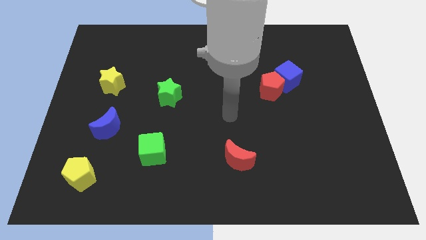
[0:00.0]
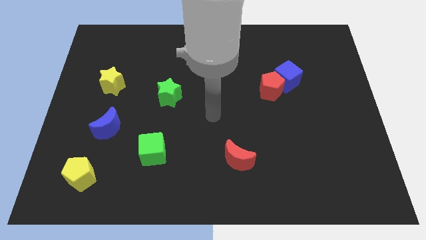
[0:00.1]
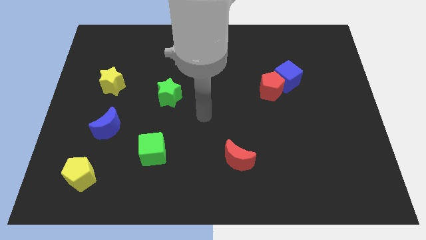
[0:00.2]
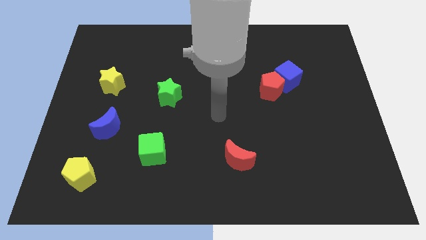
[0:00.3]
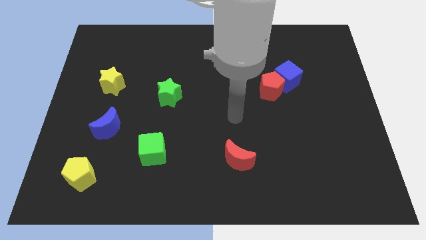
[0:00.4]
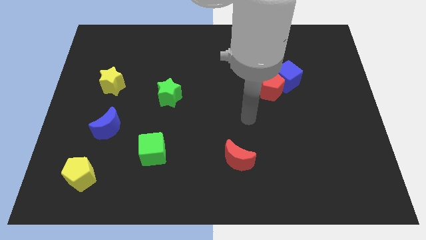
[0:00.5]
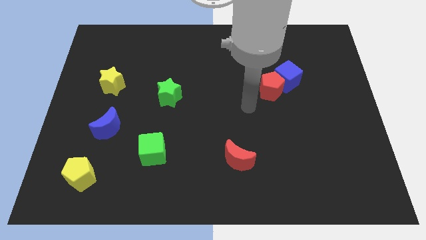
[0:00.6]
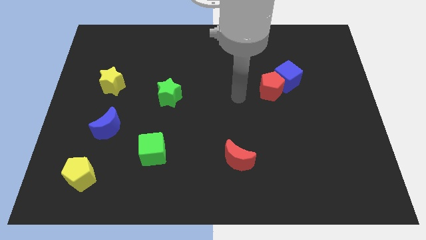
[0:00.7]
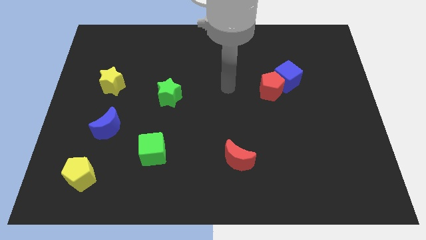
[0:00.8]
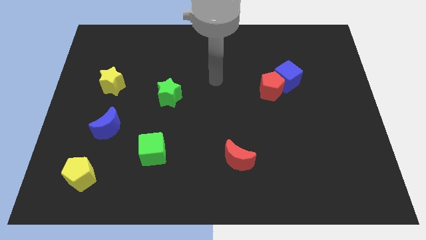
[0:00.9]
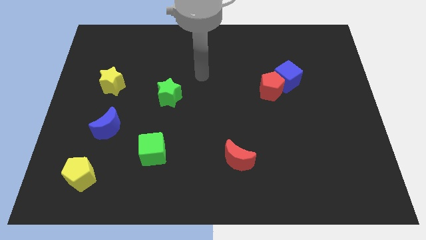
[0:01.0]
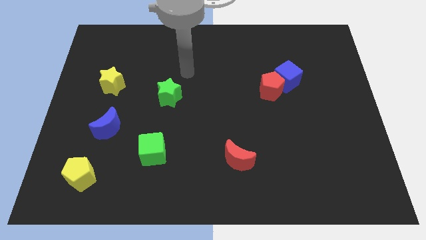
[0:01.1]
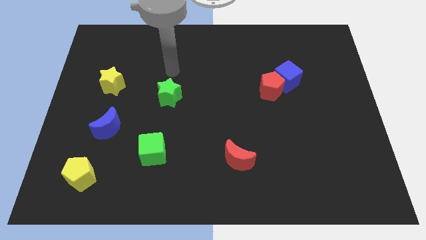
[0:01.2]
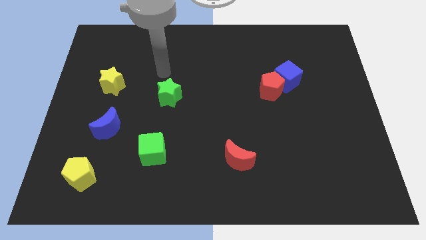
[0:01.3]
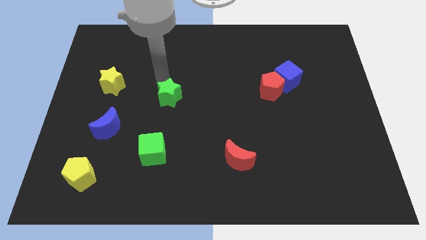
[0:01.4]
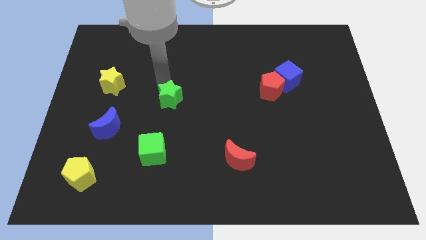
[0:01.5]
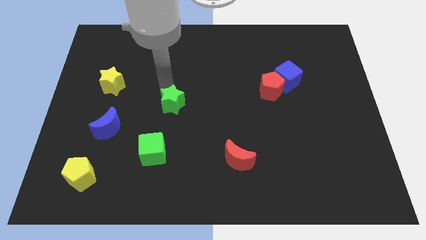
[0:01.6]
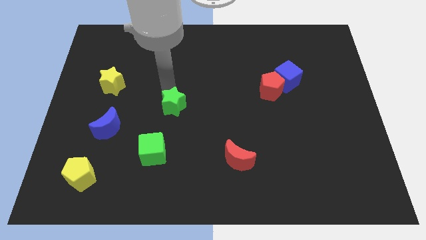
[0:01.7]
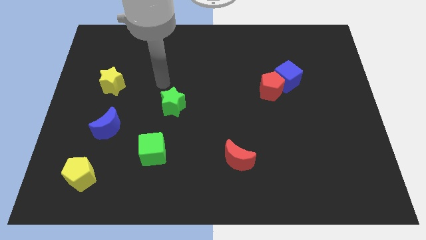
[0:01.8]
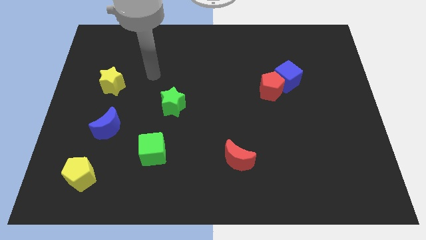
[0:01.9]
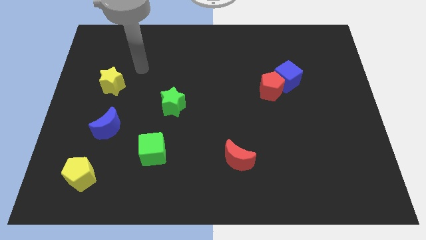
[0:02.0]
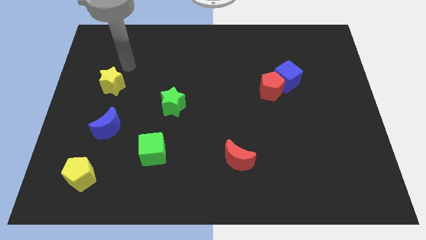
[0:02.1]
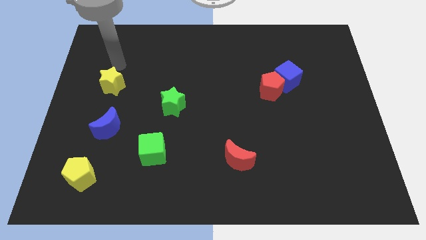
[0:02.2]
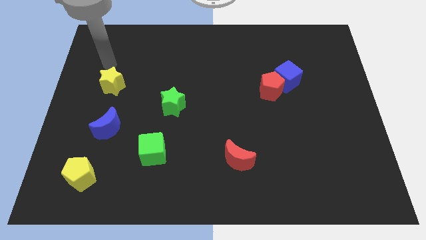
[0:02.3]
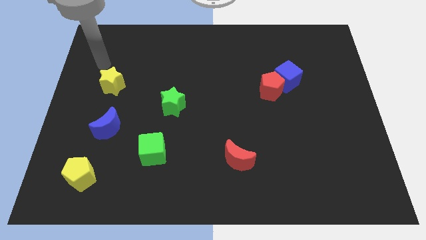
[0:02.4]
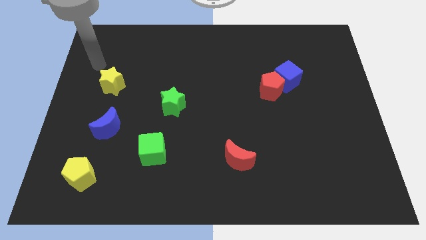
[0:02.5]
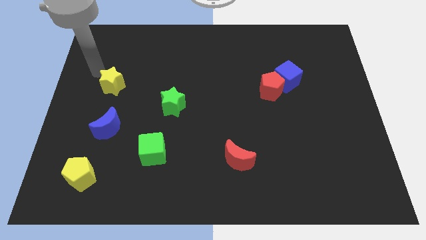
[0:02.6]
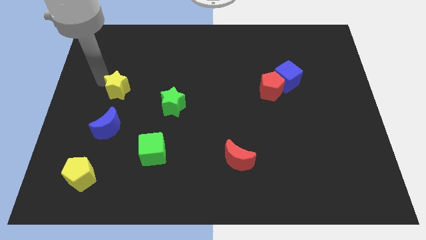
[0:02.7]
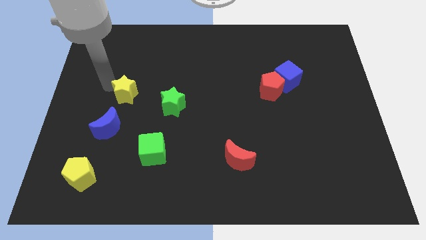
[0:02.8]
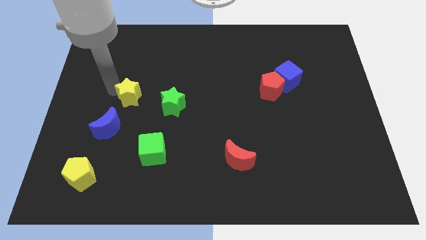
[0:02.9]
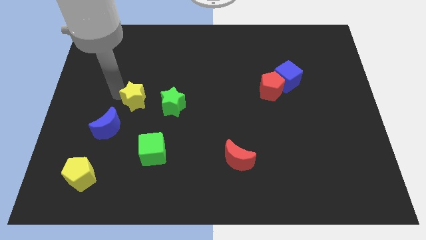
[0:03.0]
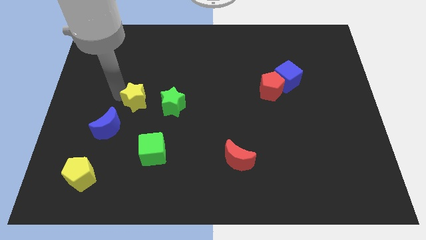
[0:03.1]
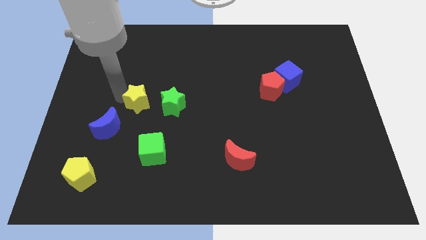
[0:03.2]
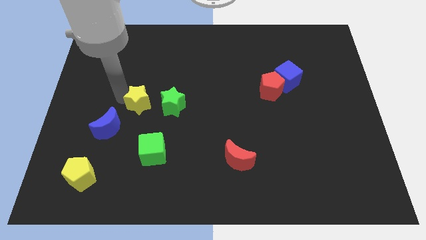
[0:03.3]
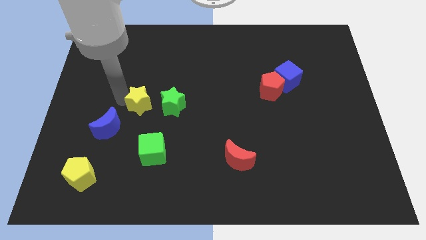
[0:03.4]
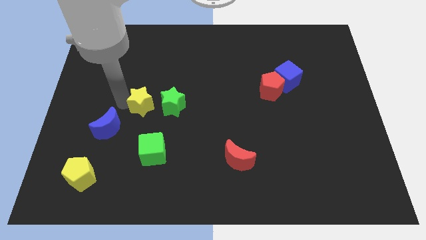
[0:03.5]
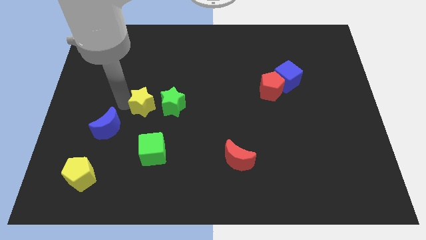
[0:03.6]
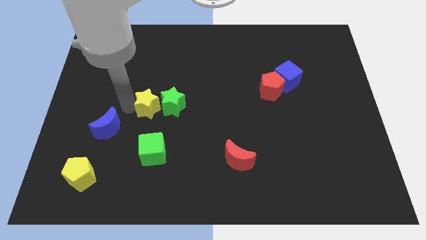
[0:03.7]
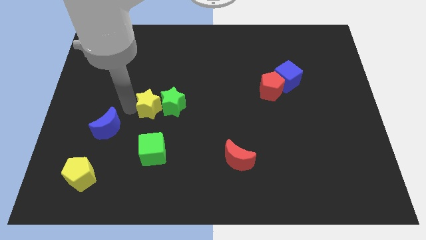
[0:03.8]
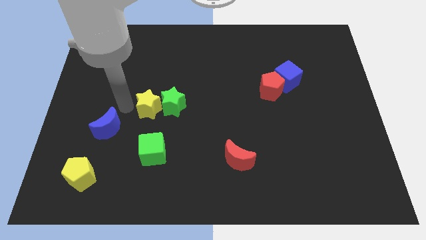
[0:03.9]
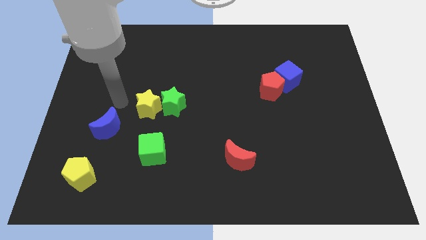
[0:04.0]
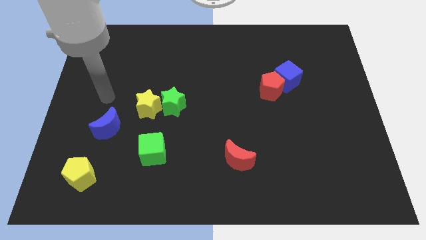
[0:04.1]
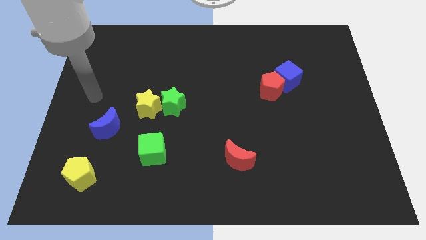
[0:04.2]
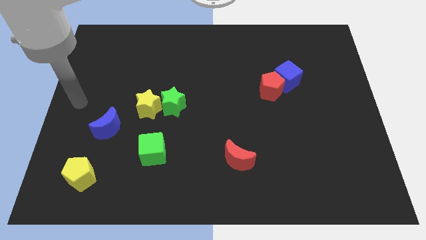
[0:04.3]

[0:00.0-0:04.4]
place the yellow star in between the blue moon and green star

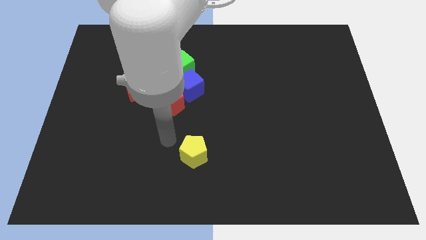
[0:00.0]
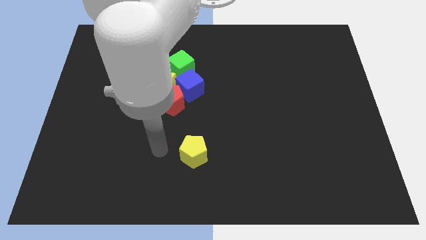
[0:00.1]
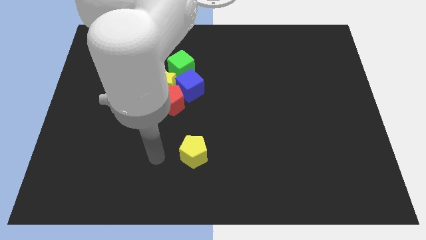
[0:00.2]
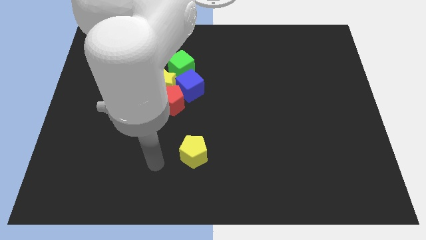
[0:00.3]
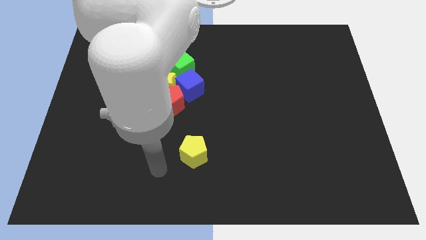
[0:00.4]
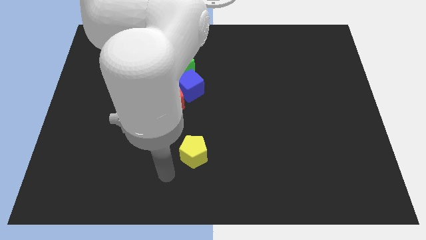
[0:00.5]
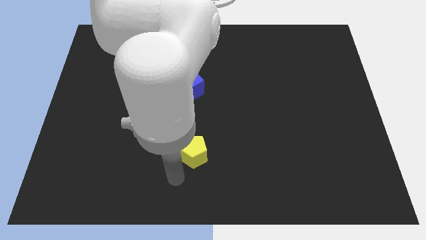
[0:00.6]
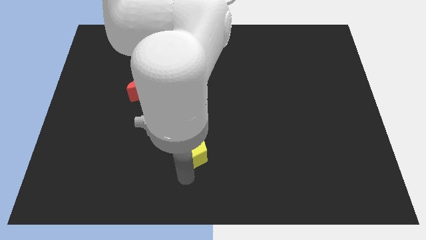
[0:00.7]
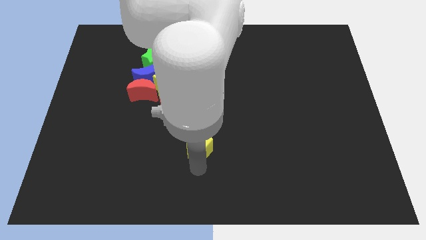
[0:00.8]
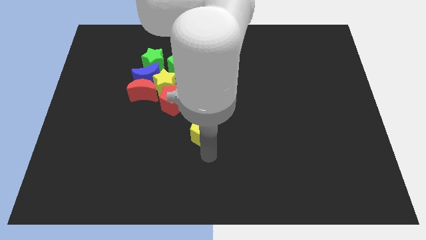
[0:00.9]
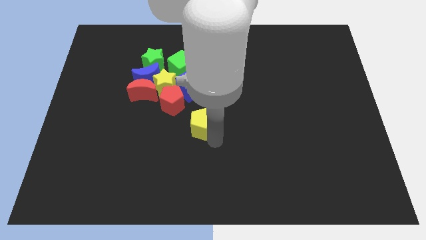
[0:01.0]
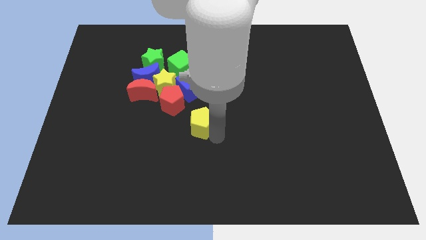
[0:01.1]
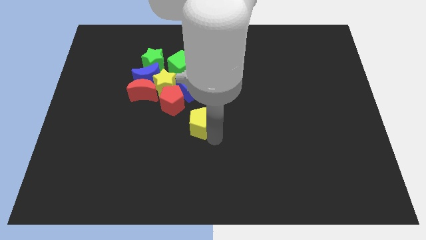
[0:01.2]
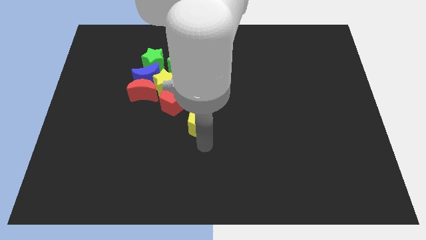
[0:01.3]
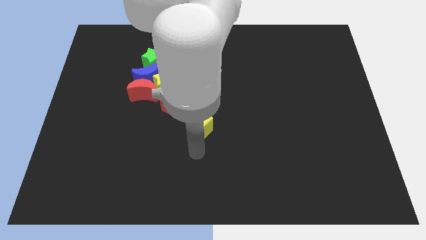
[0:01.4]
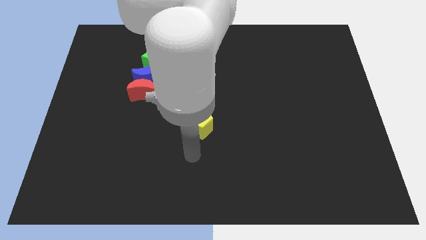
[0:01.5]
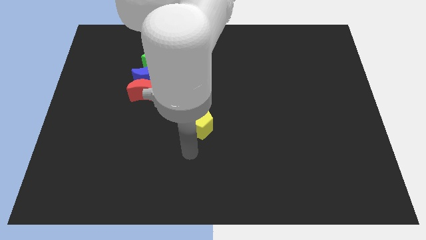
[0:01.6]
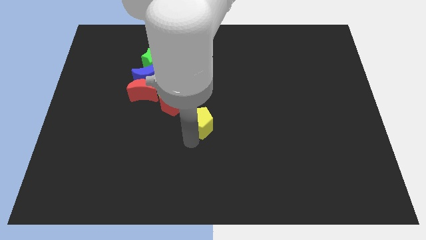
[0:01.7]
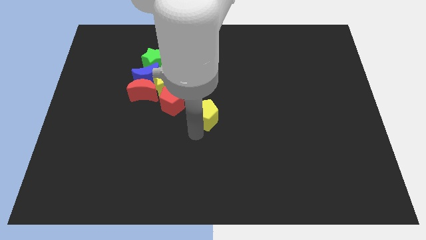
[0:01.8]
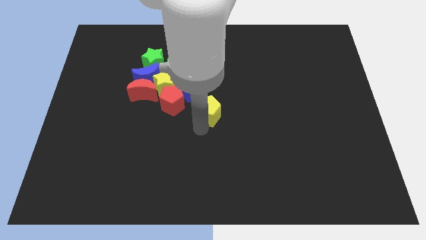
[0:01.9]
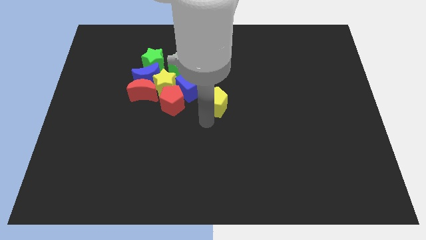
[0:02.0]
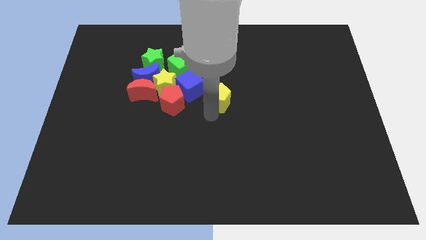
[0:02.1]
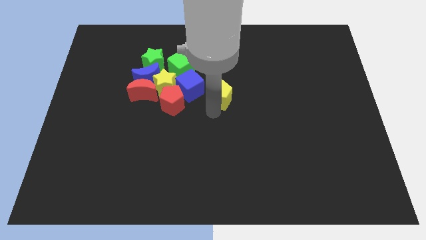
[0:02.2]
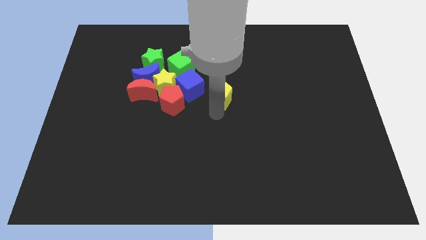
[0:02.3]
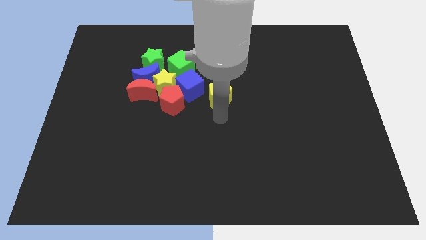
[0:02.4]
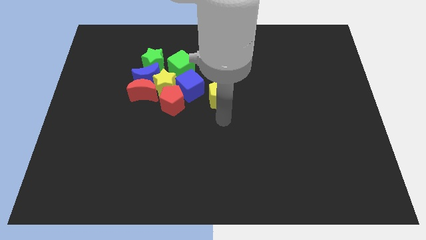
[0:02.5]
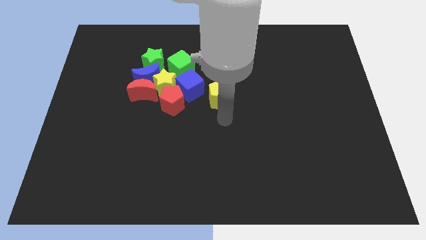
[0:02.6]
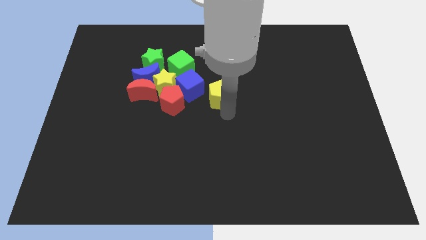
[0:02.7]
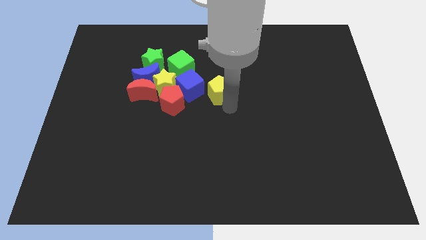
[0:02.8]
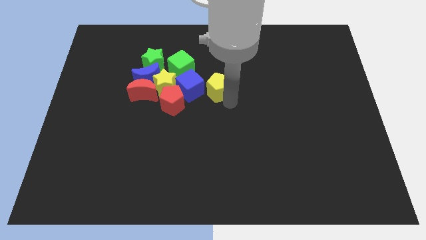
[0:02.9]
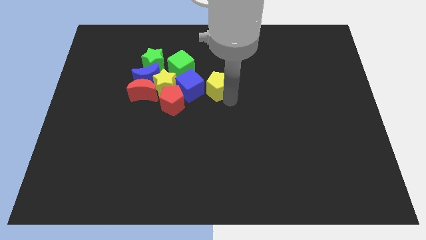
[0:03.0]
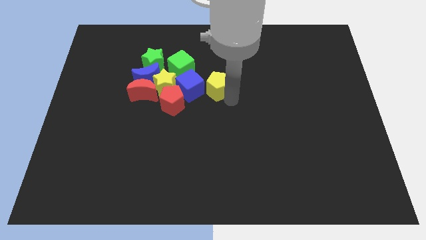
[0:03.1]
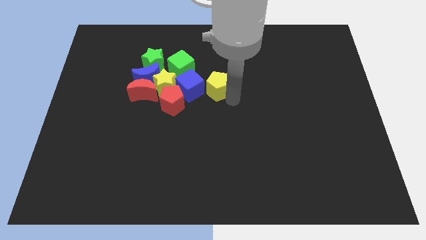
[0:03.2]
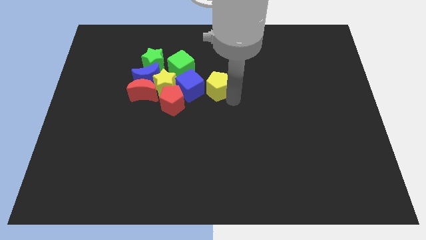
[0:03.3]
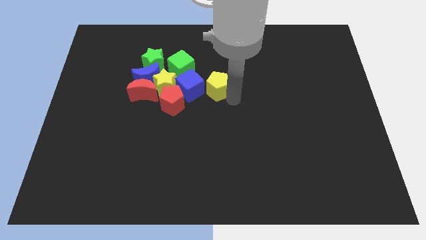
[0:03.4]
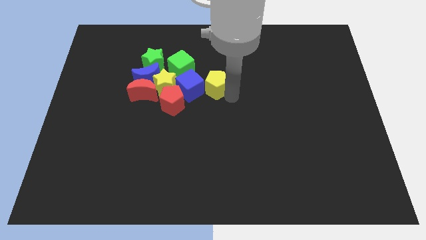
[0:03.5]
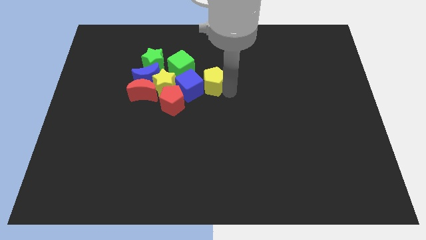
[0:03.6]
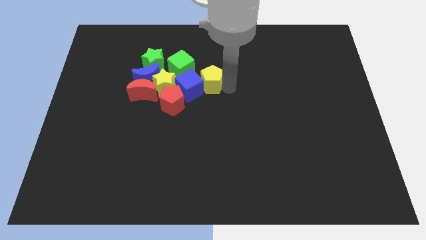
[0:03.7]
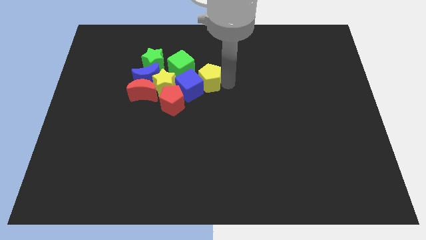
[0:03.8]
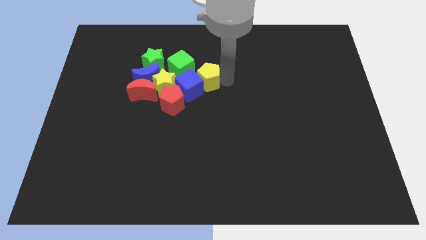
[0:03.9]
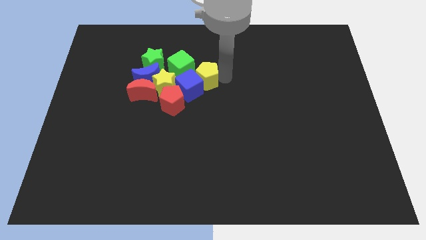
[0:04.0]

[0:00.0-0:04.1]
drag the yellow pentagon close to a group of blocks

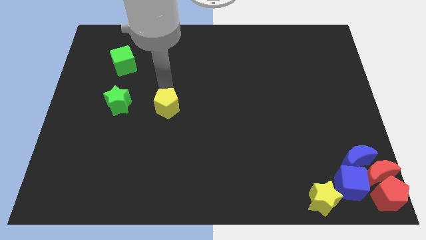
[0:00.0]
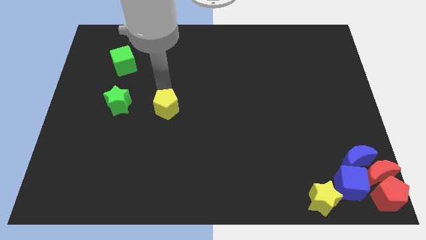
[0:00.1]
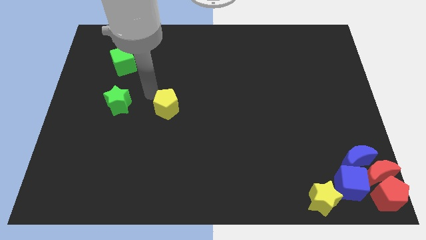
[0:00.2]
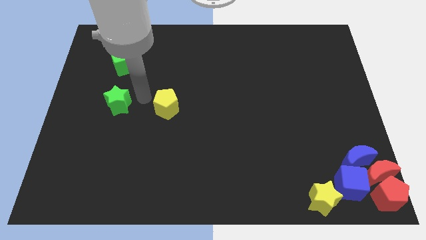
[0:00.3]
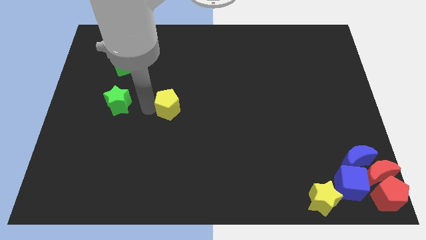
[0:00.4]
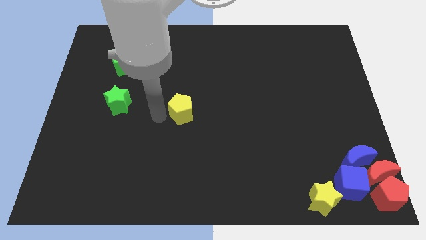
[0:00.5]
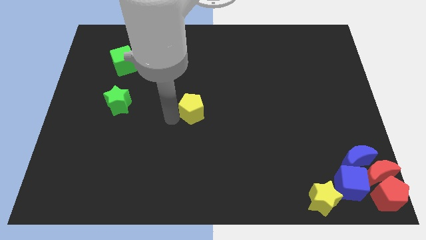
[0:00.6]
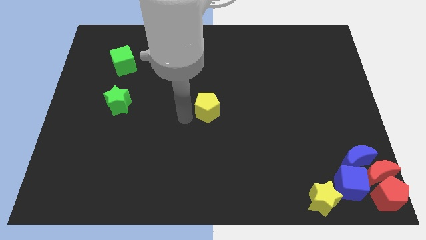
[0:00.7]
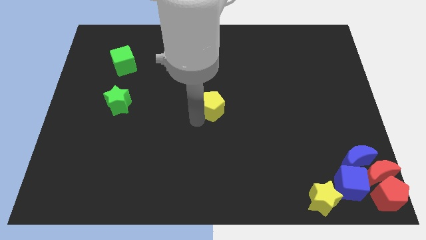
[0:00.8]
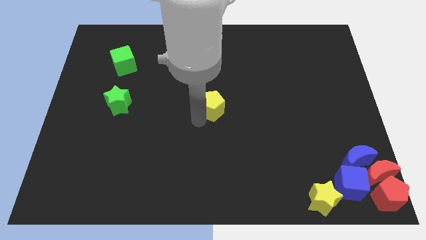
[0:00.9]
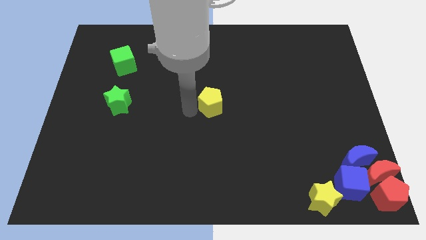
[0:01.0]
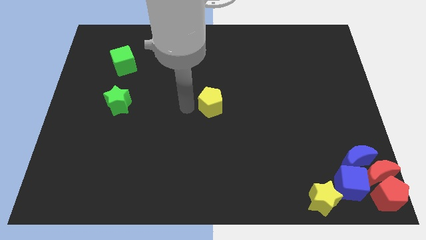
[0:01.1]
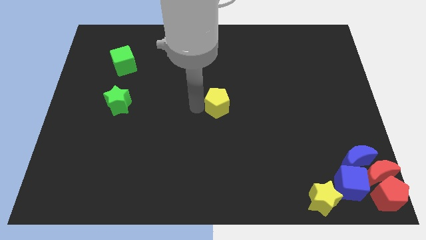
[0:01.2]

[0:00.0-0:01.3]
move the yellow pentagon to the center of the board
